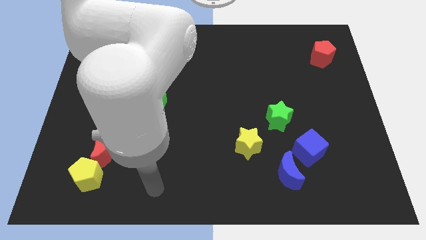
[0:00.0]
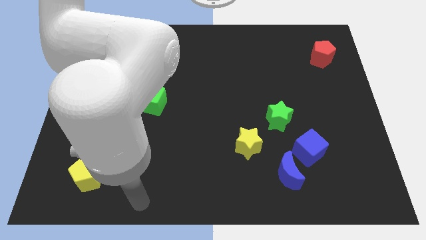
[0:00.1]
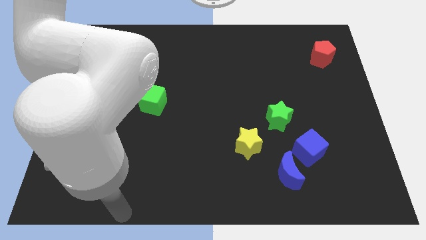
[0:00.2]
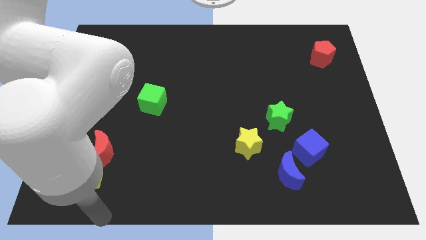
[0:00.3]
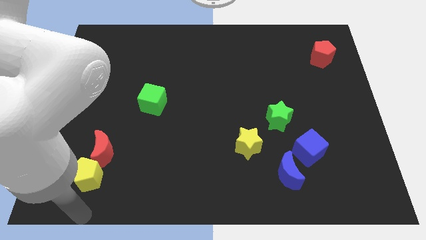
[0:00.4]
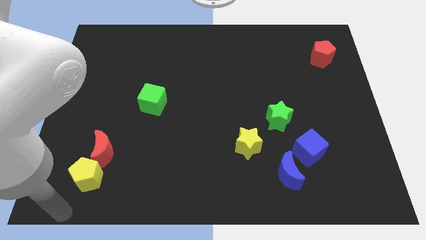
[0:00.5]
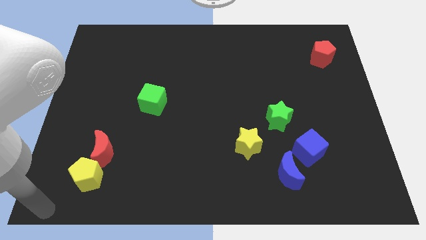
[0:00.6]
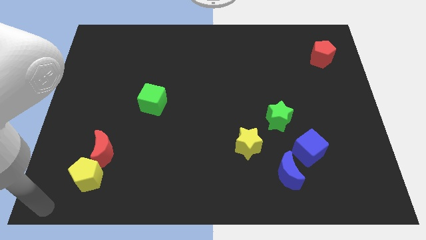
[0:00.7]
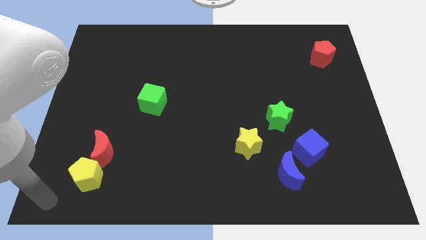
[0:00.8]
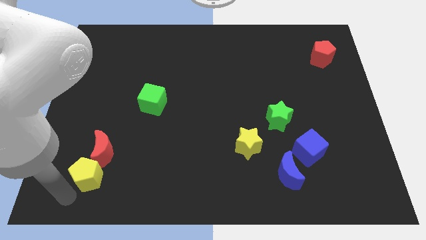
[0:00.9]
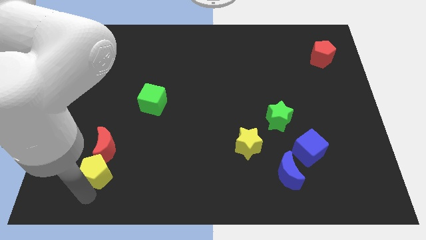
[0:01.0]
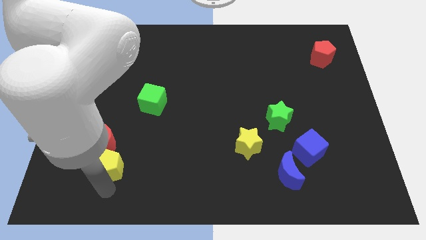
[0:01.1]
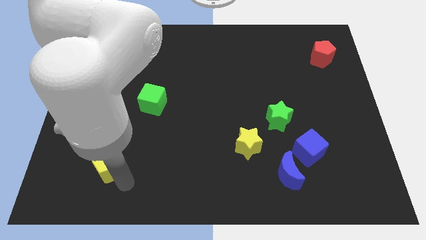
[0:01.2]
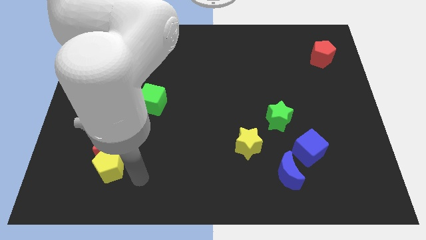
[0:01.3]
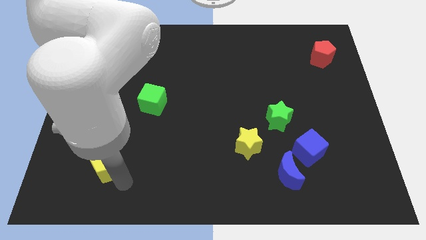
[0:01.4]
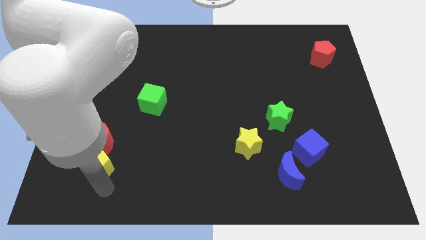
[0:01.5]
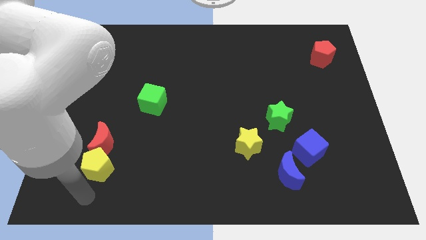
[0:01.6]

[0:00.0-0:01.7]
push the yellow pentagon below the red crescent

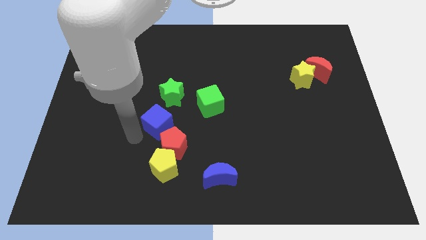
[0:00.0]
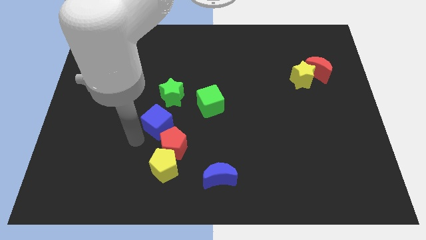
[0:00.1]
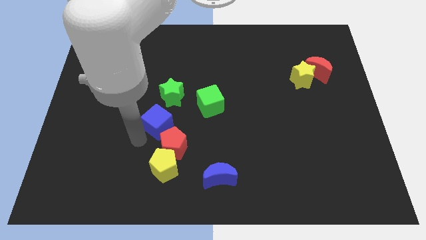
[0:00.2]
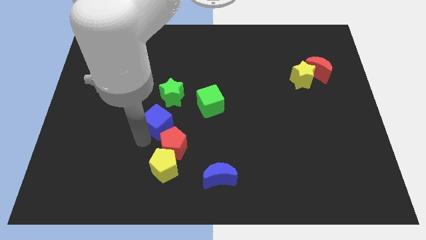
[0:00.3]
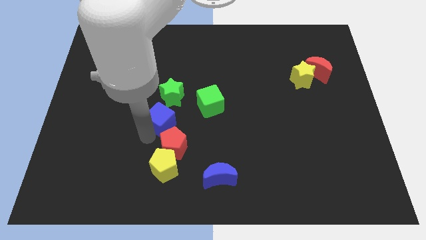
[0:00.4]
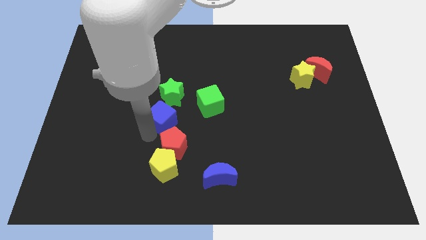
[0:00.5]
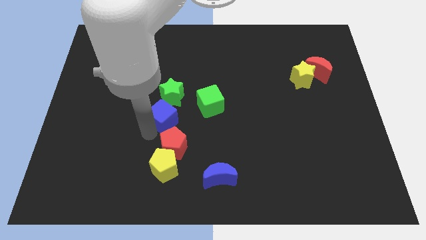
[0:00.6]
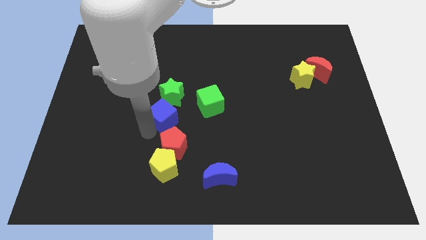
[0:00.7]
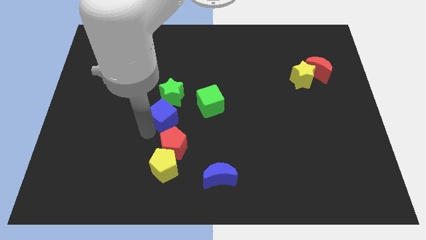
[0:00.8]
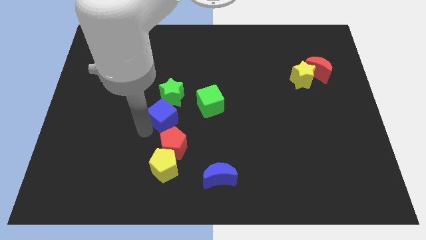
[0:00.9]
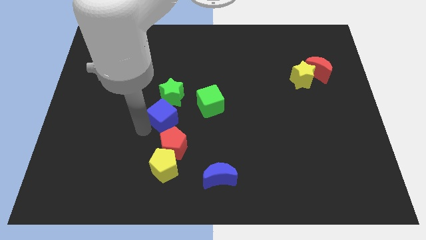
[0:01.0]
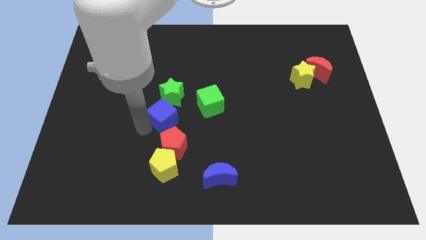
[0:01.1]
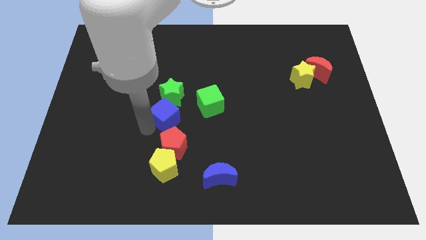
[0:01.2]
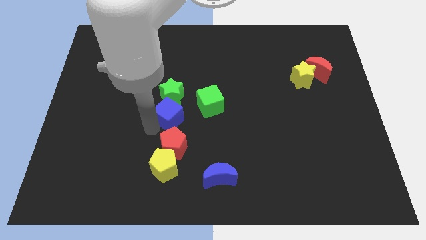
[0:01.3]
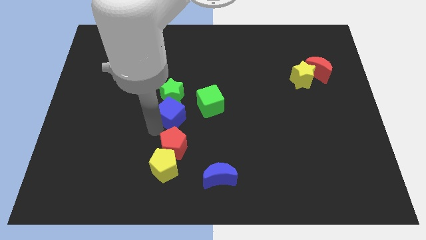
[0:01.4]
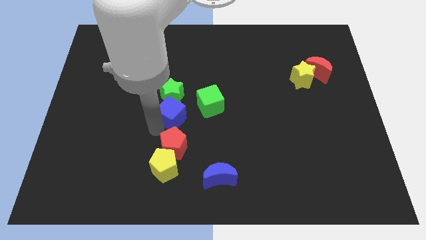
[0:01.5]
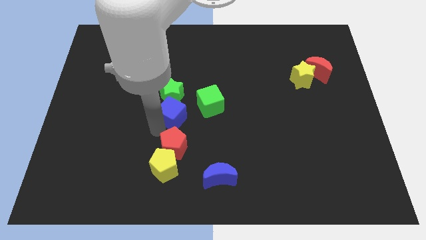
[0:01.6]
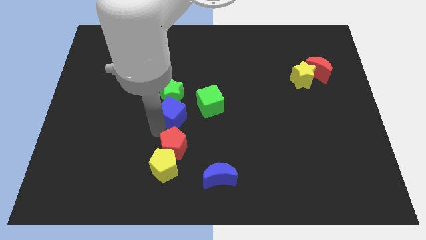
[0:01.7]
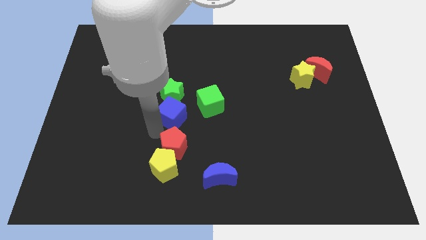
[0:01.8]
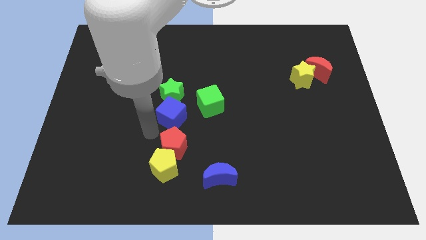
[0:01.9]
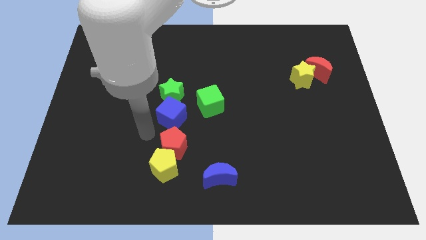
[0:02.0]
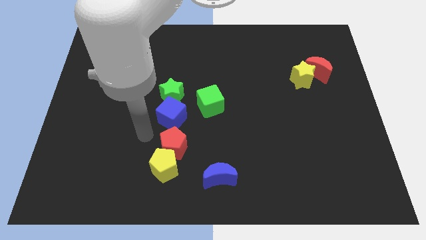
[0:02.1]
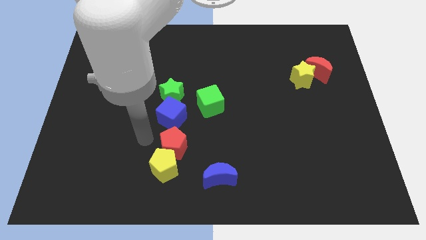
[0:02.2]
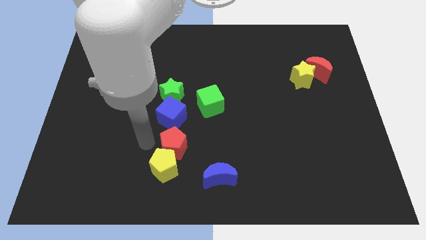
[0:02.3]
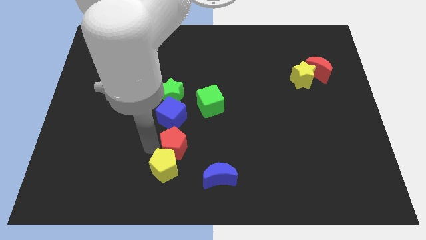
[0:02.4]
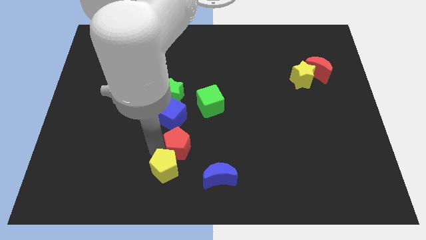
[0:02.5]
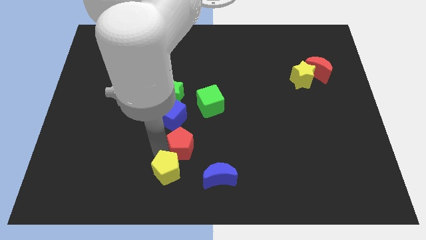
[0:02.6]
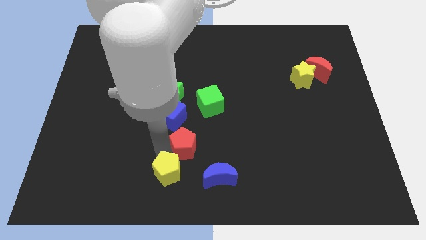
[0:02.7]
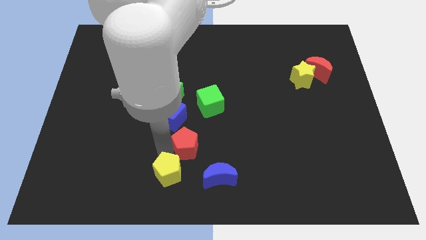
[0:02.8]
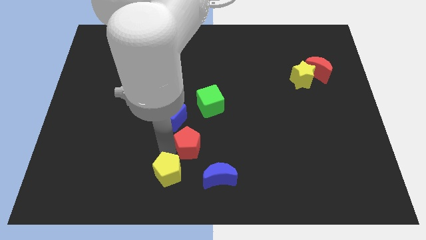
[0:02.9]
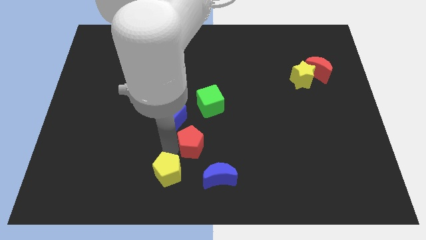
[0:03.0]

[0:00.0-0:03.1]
move the blue cube below the green star

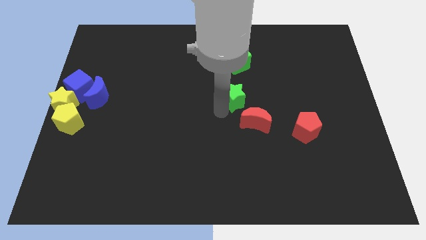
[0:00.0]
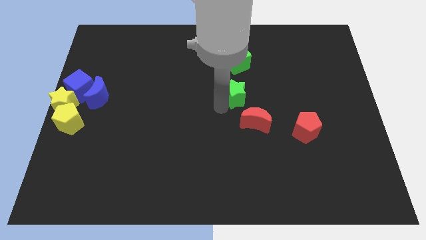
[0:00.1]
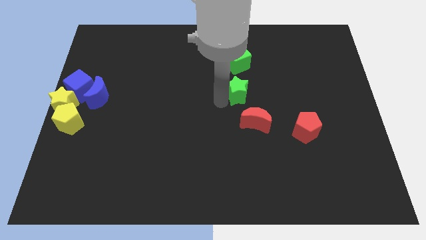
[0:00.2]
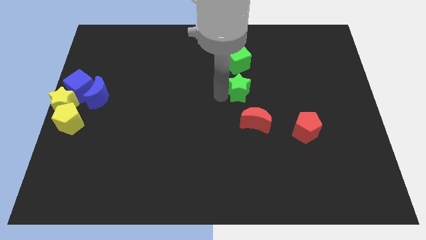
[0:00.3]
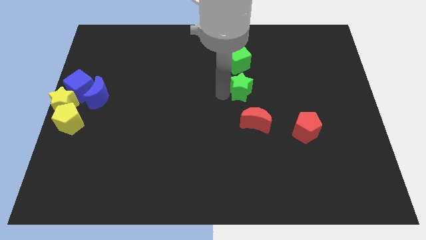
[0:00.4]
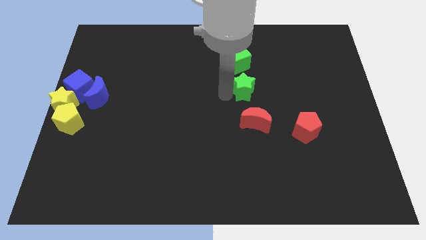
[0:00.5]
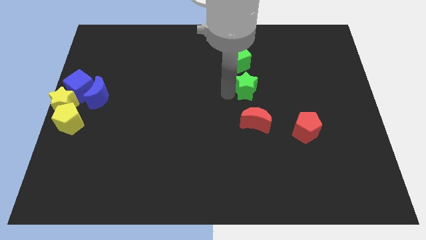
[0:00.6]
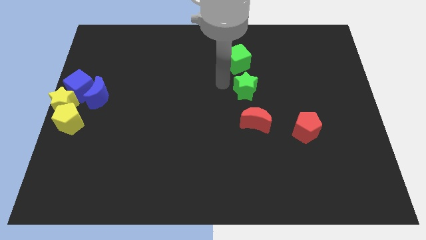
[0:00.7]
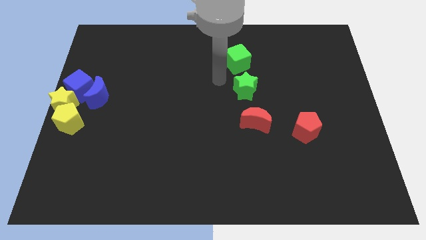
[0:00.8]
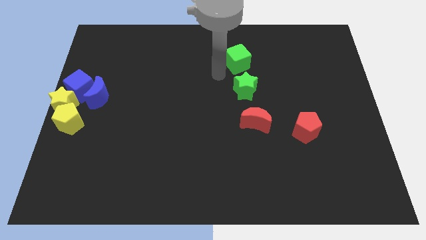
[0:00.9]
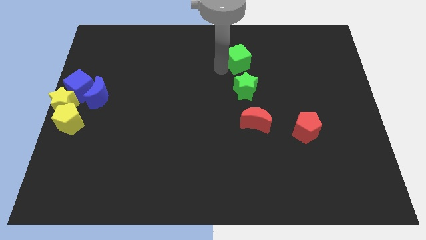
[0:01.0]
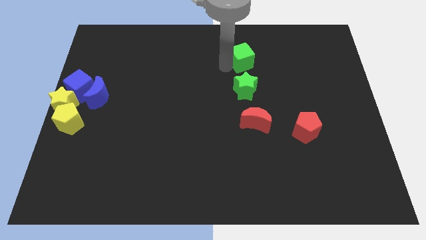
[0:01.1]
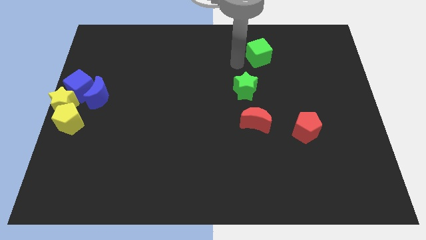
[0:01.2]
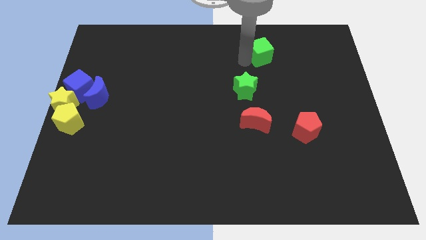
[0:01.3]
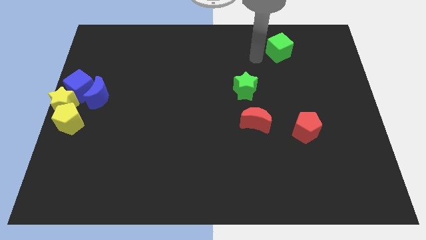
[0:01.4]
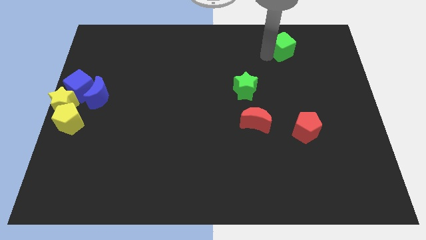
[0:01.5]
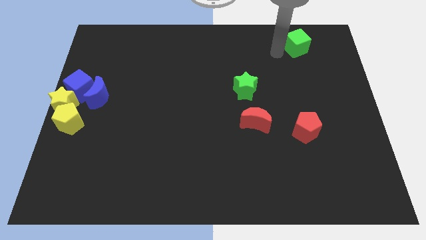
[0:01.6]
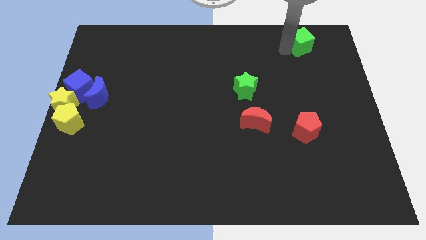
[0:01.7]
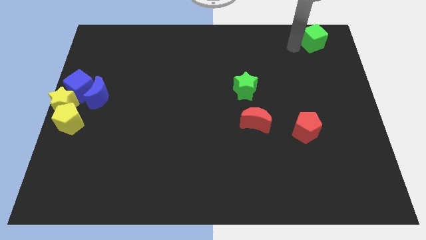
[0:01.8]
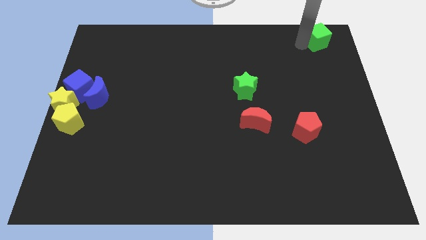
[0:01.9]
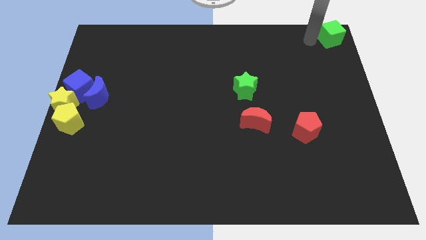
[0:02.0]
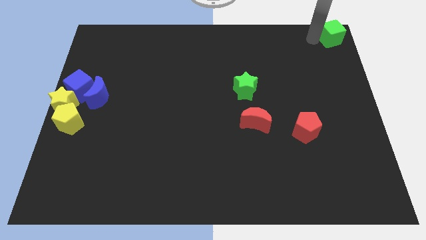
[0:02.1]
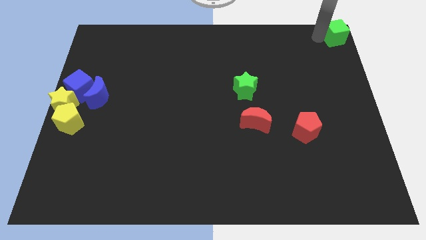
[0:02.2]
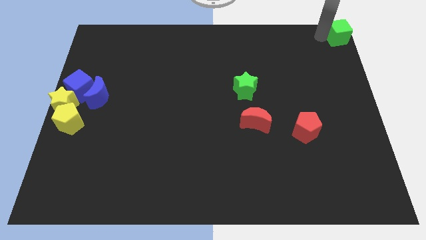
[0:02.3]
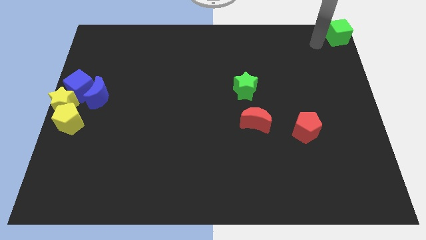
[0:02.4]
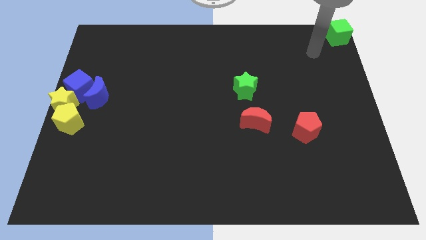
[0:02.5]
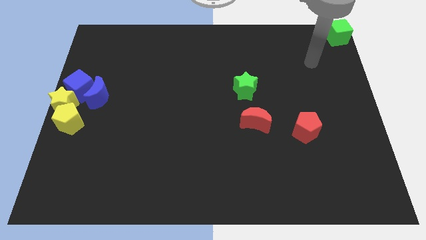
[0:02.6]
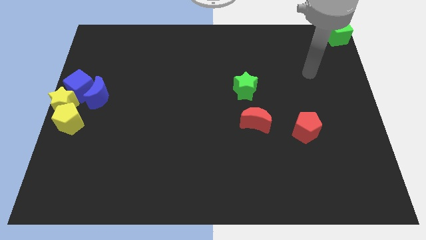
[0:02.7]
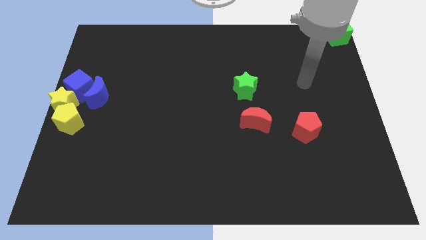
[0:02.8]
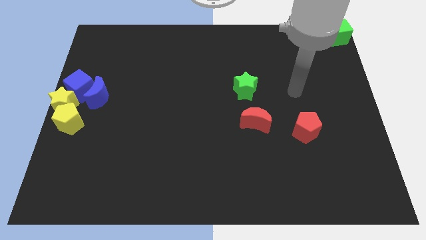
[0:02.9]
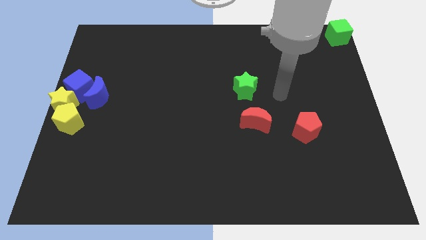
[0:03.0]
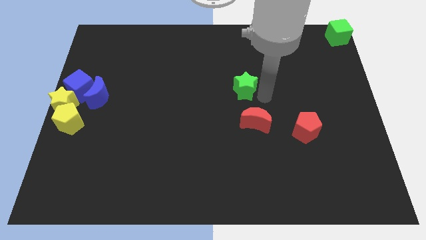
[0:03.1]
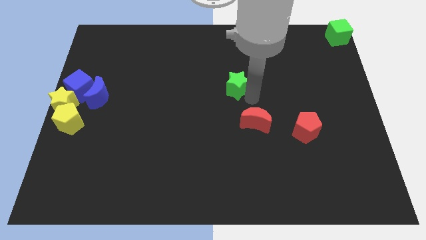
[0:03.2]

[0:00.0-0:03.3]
move the green cube to the top right of the board

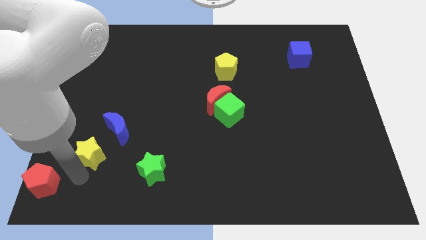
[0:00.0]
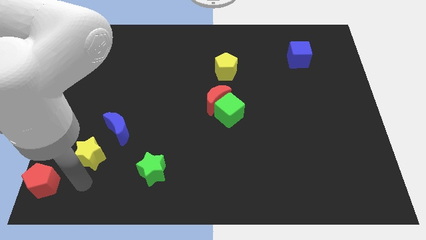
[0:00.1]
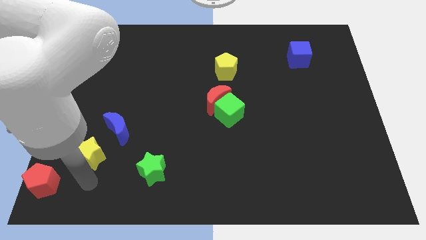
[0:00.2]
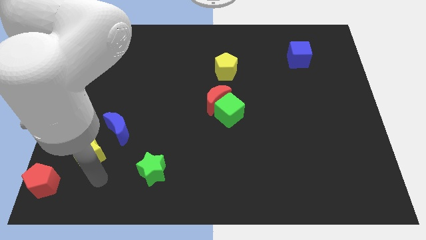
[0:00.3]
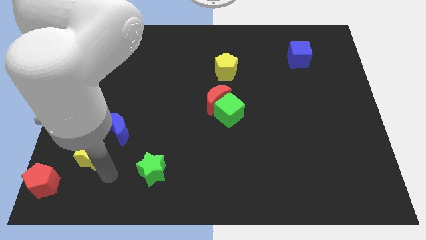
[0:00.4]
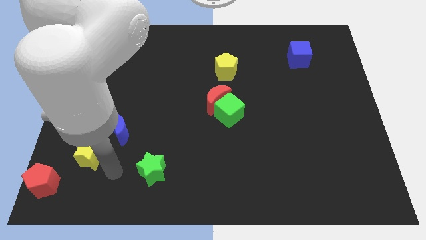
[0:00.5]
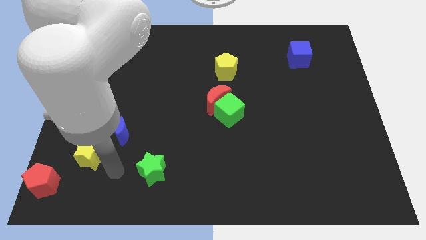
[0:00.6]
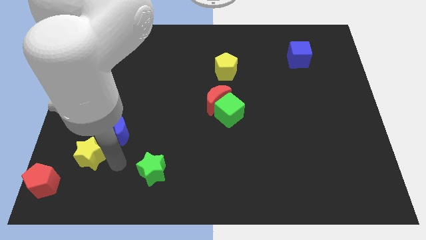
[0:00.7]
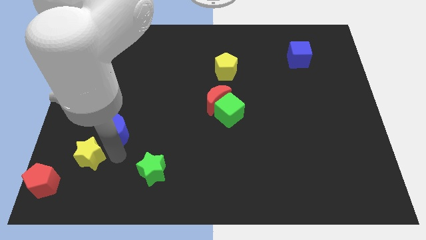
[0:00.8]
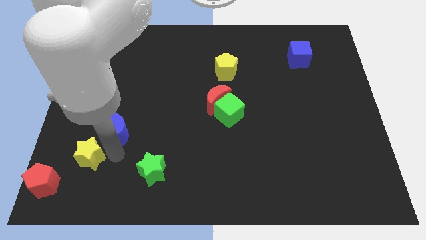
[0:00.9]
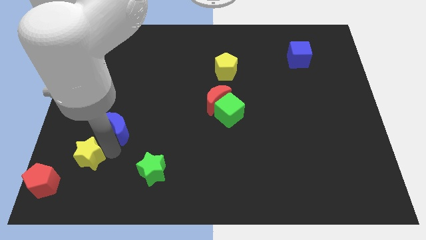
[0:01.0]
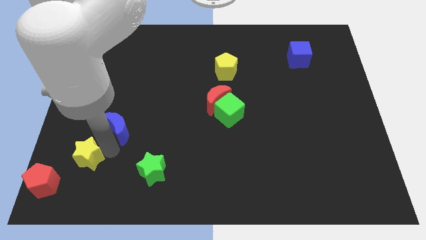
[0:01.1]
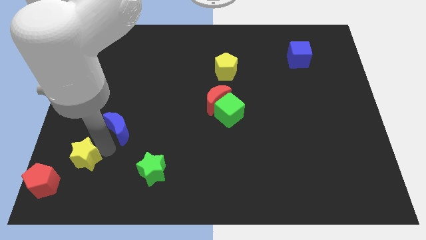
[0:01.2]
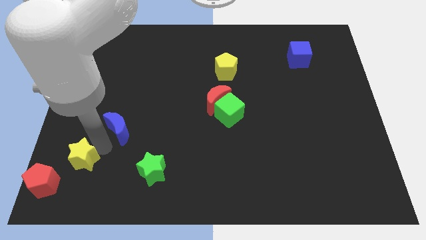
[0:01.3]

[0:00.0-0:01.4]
place your arm between yellow star and blue moon
